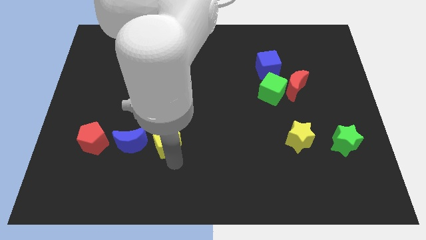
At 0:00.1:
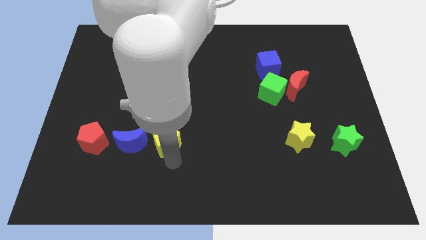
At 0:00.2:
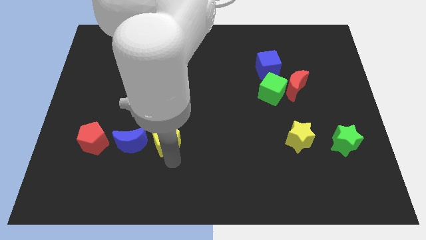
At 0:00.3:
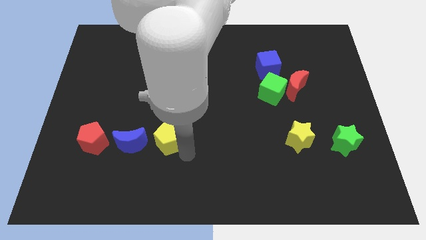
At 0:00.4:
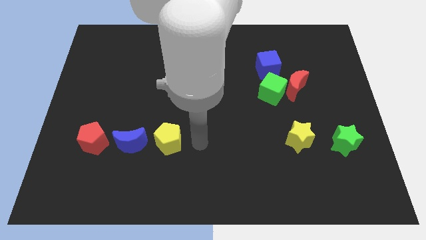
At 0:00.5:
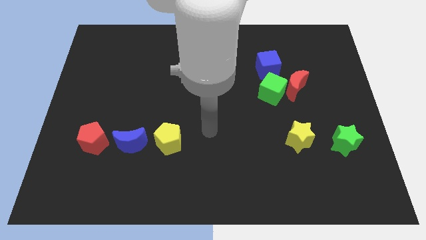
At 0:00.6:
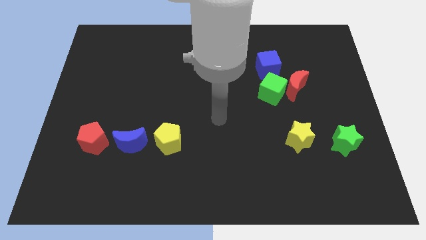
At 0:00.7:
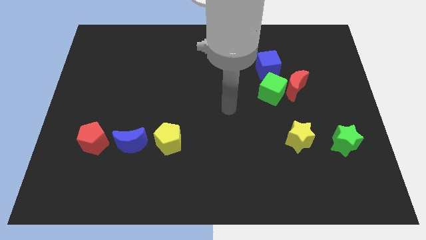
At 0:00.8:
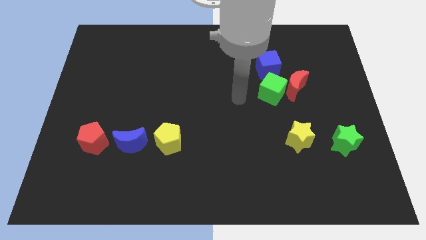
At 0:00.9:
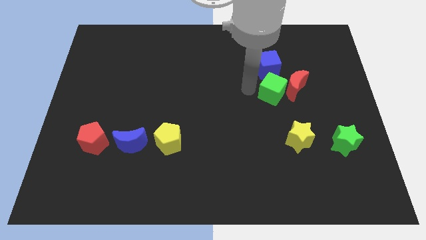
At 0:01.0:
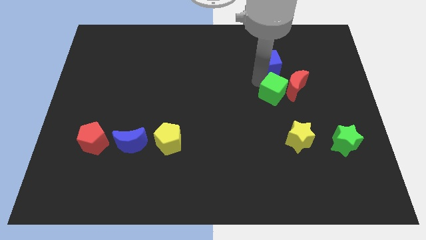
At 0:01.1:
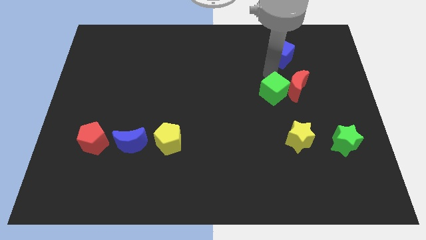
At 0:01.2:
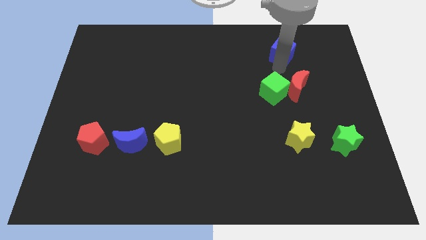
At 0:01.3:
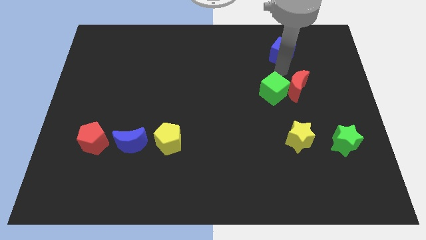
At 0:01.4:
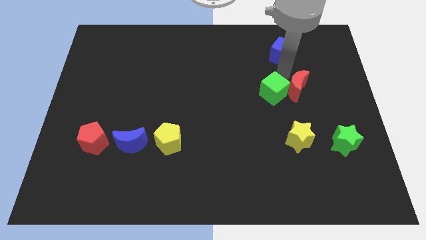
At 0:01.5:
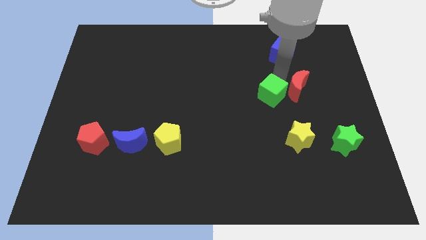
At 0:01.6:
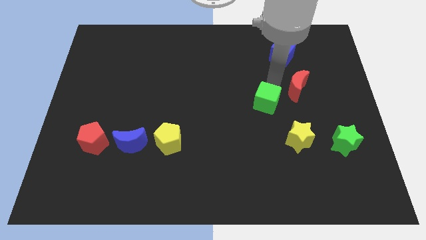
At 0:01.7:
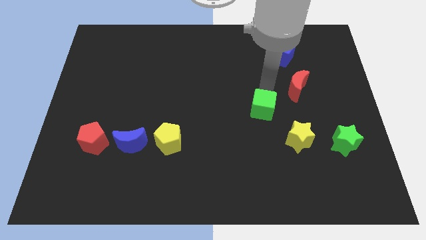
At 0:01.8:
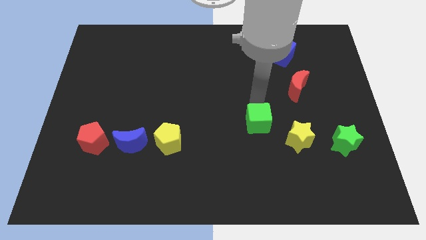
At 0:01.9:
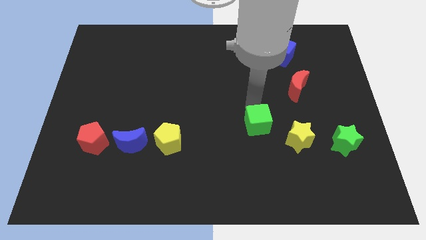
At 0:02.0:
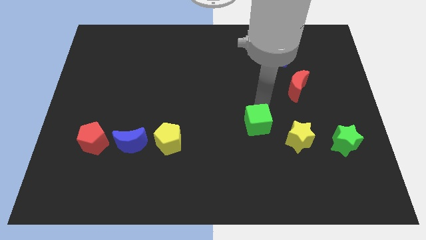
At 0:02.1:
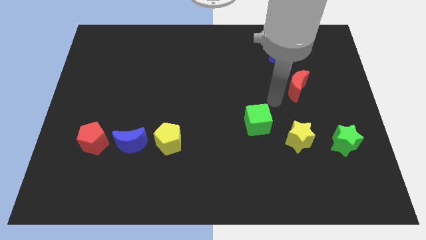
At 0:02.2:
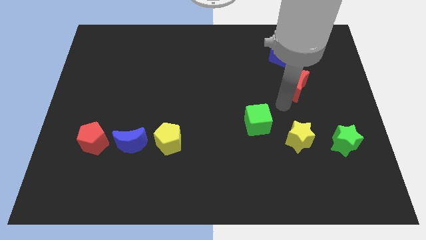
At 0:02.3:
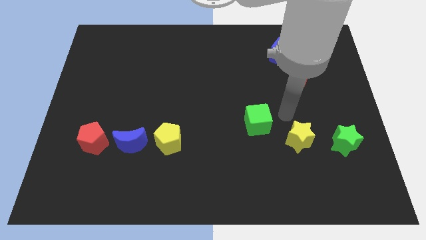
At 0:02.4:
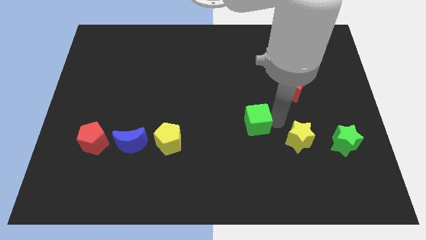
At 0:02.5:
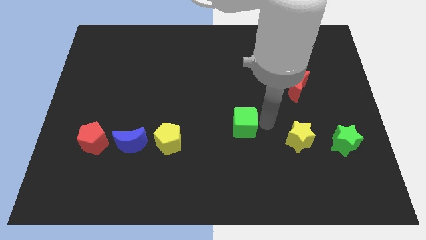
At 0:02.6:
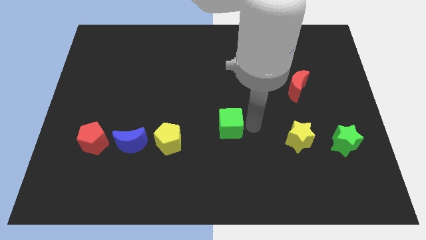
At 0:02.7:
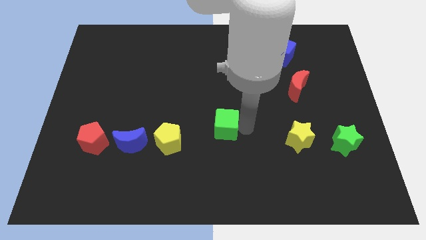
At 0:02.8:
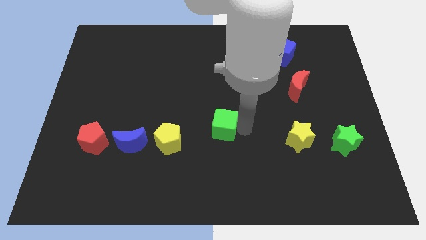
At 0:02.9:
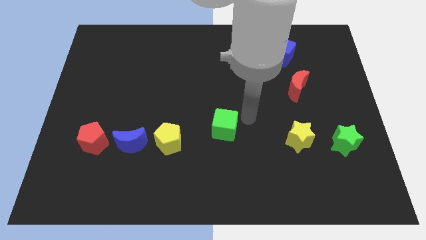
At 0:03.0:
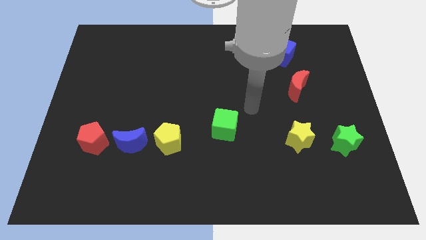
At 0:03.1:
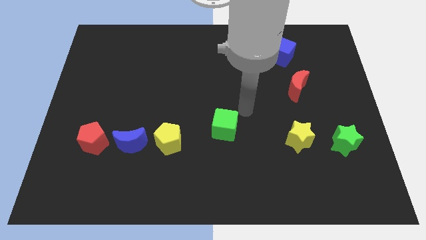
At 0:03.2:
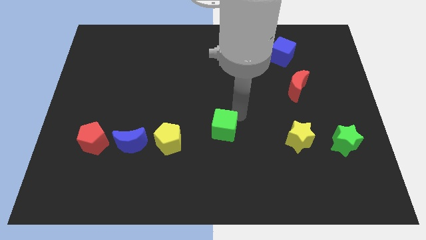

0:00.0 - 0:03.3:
separate the green cube and the red moon

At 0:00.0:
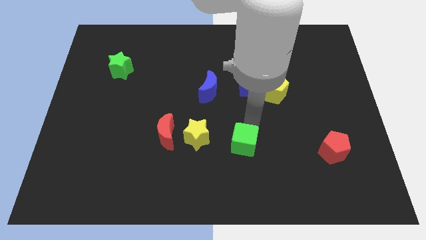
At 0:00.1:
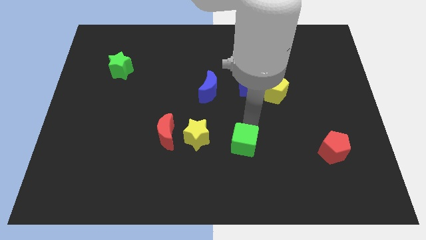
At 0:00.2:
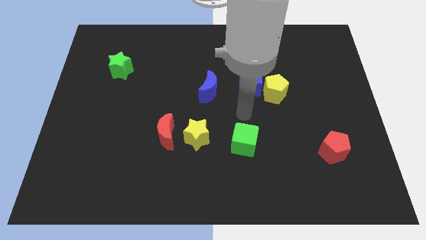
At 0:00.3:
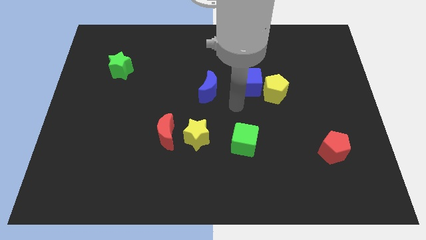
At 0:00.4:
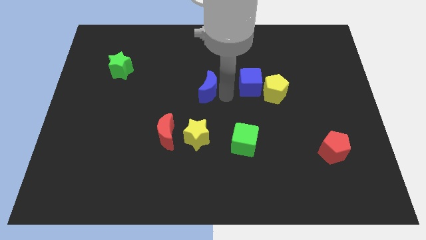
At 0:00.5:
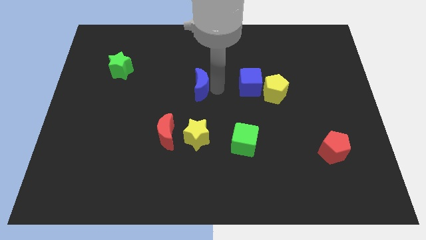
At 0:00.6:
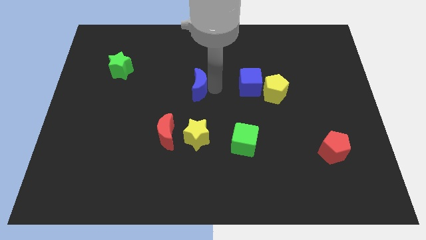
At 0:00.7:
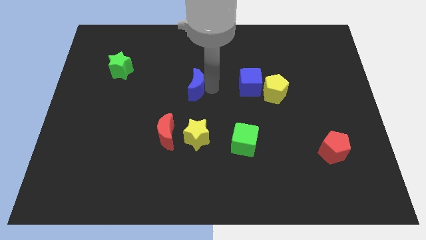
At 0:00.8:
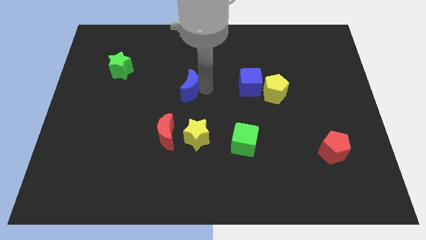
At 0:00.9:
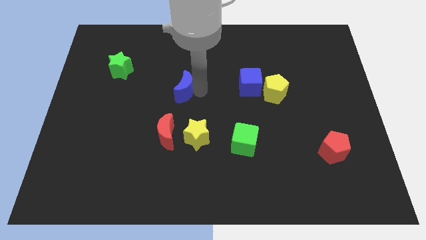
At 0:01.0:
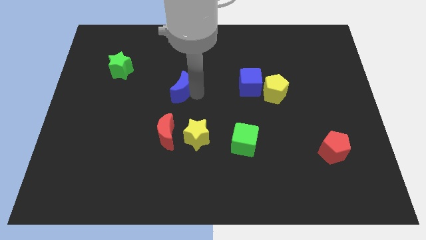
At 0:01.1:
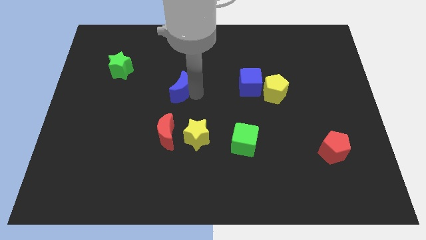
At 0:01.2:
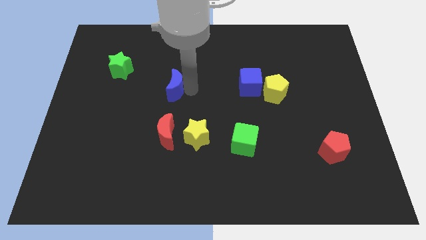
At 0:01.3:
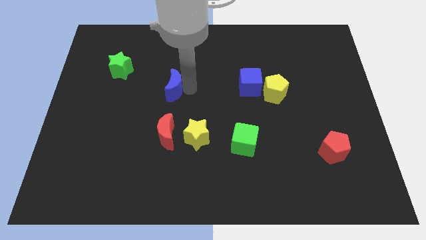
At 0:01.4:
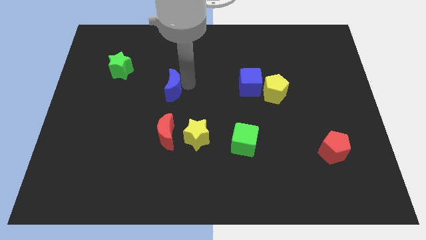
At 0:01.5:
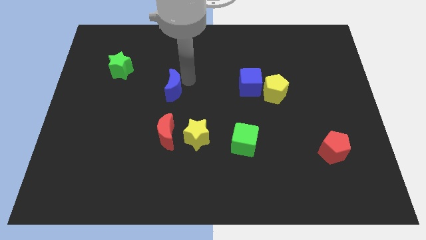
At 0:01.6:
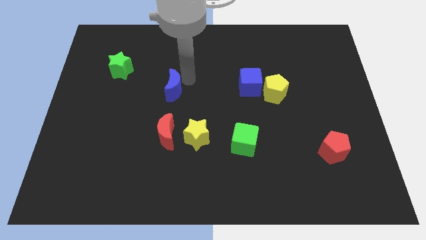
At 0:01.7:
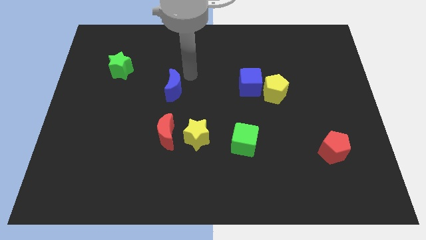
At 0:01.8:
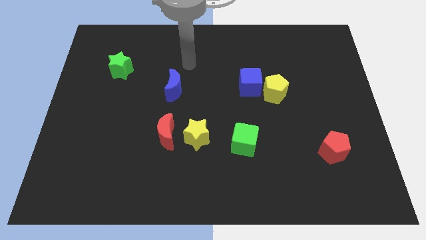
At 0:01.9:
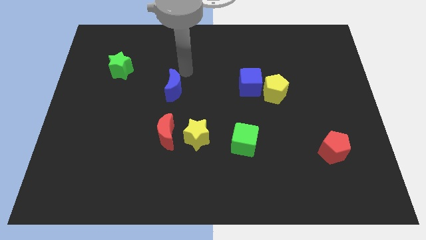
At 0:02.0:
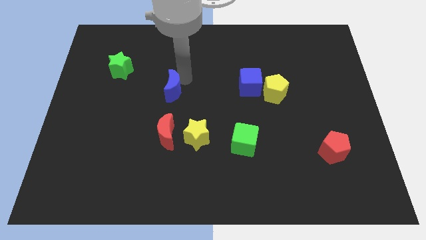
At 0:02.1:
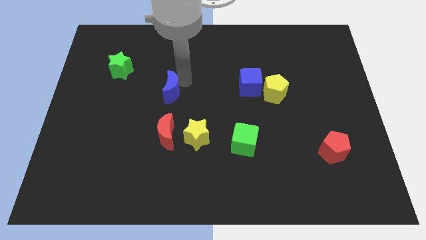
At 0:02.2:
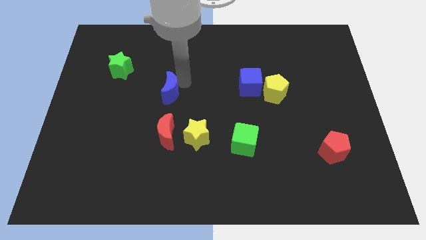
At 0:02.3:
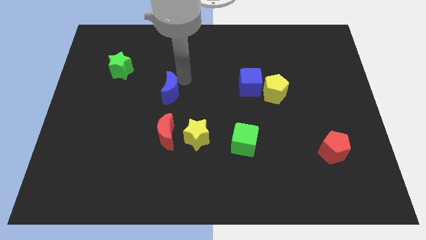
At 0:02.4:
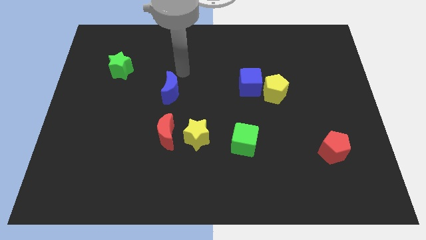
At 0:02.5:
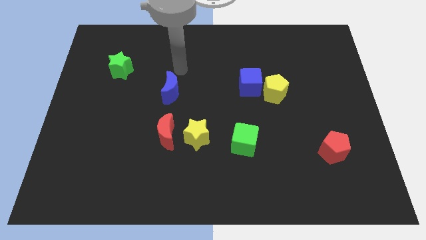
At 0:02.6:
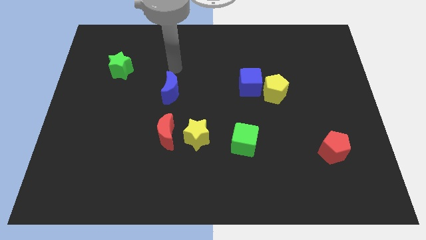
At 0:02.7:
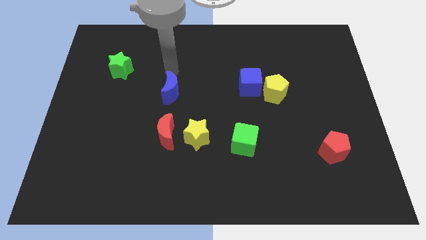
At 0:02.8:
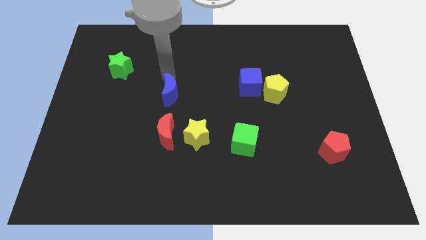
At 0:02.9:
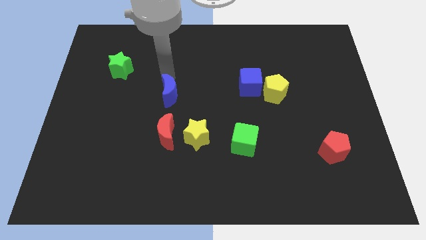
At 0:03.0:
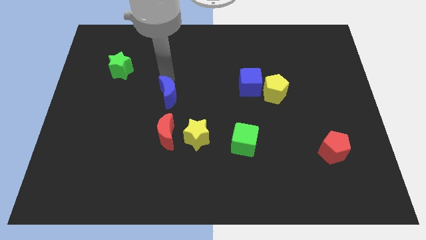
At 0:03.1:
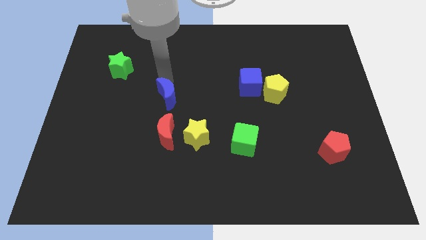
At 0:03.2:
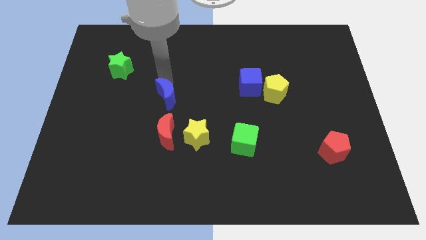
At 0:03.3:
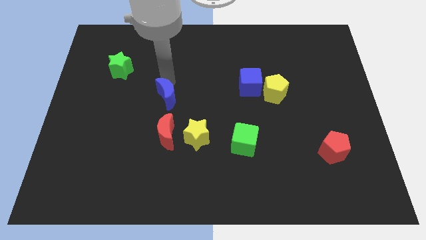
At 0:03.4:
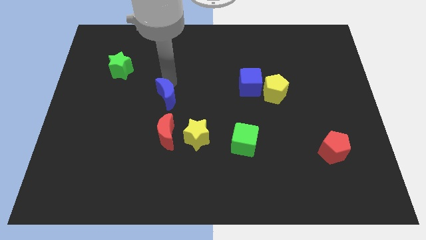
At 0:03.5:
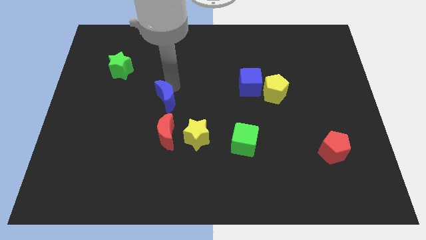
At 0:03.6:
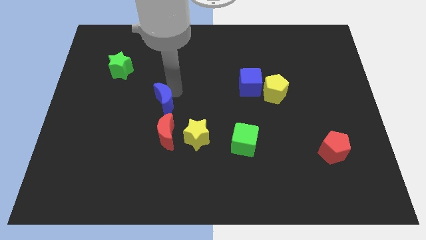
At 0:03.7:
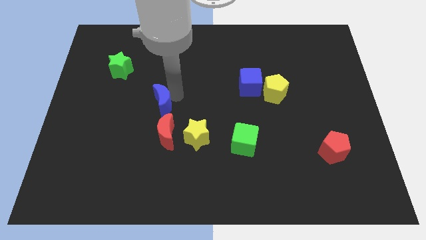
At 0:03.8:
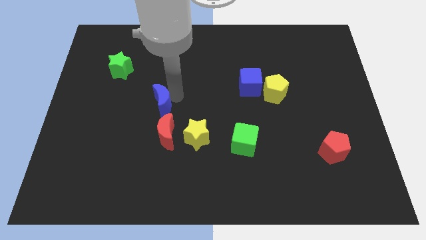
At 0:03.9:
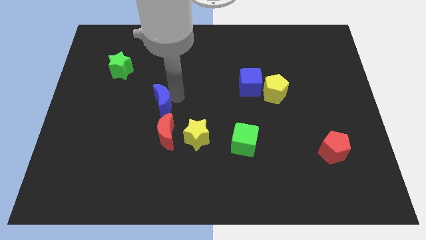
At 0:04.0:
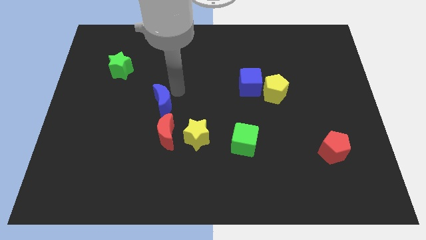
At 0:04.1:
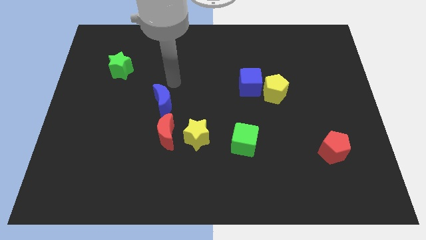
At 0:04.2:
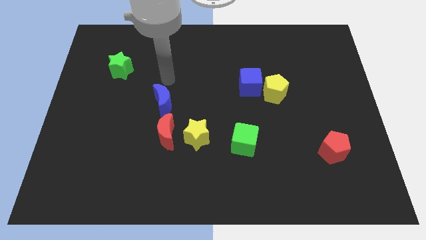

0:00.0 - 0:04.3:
move the blue crescent on top of the red crescent

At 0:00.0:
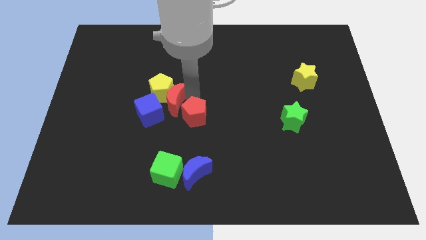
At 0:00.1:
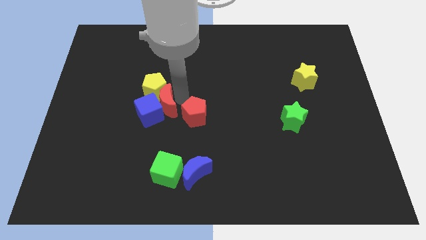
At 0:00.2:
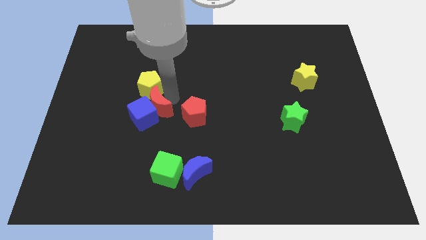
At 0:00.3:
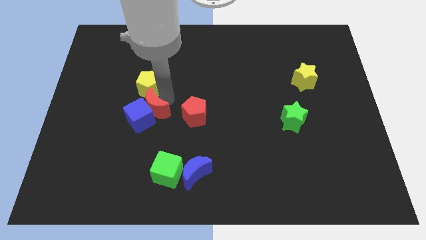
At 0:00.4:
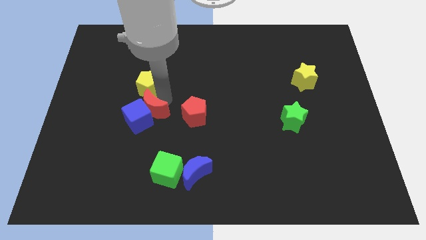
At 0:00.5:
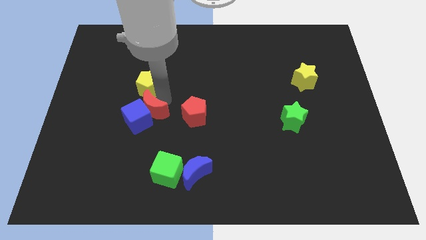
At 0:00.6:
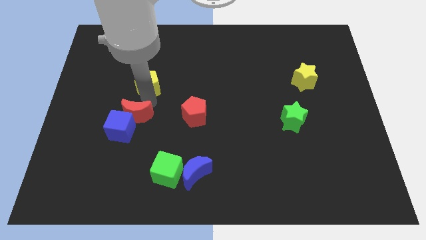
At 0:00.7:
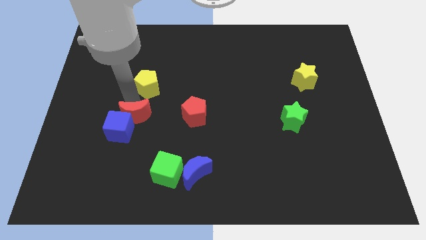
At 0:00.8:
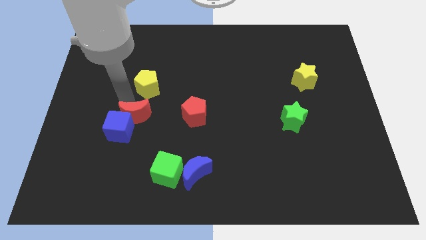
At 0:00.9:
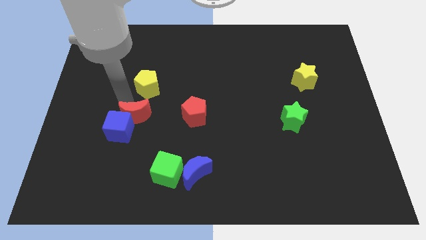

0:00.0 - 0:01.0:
push the red moon into blue cube and yellow pentagon

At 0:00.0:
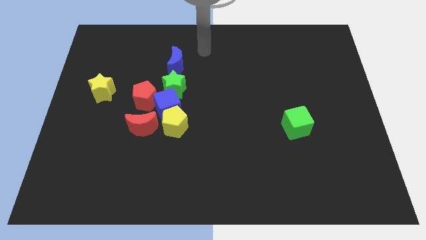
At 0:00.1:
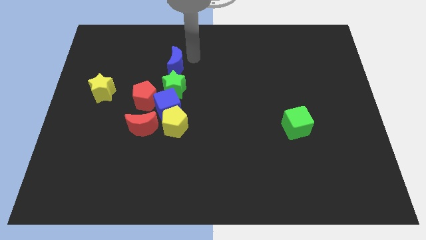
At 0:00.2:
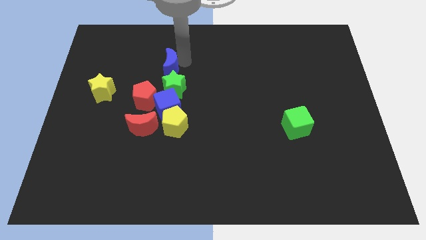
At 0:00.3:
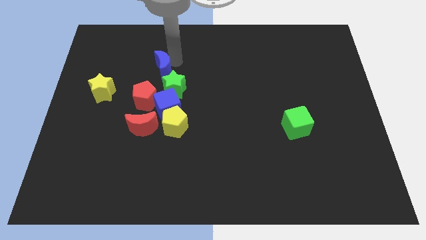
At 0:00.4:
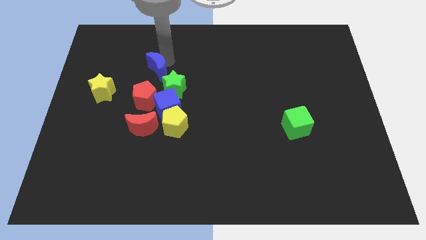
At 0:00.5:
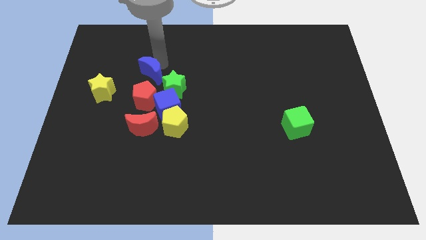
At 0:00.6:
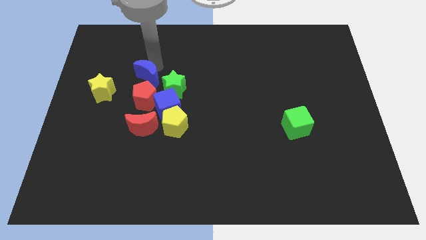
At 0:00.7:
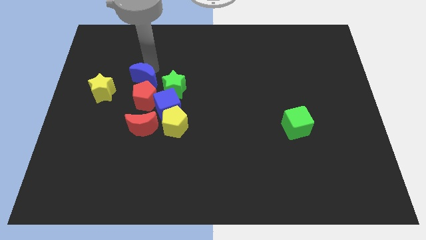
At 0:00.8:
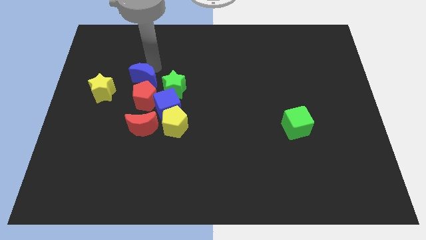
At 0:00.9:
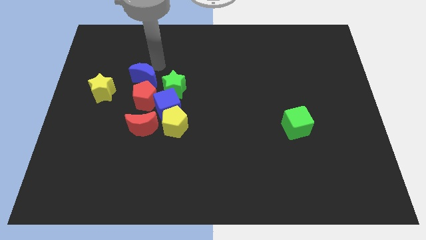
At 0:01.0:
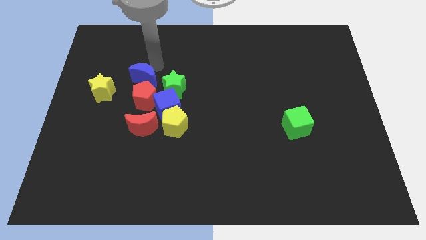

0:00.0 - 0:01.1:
push the blue crescent to the top of the red pentagon
